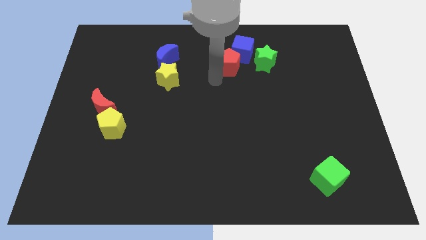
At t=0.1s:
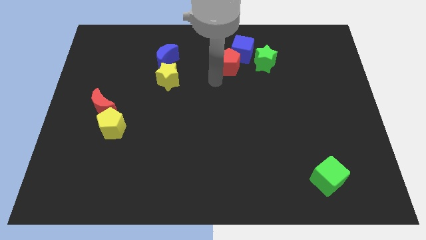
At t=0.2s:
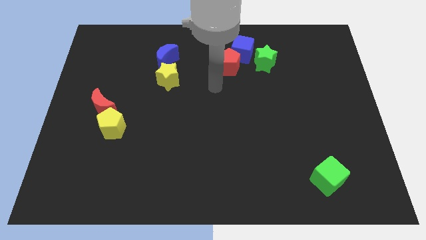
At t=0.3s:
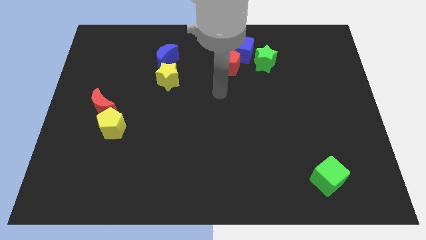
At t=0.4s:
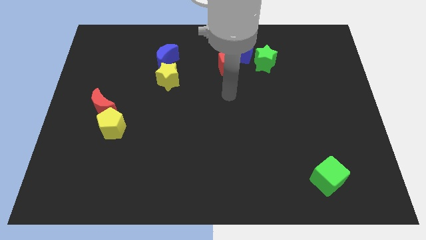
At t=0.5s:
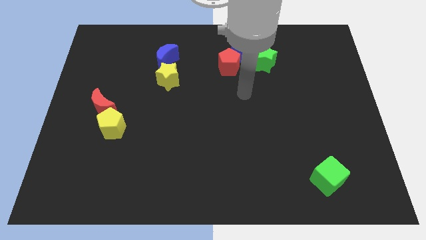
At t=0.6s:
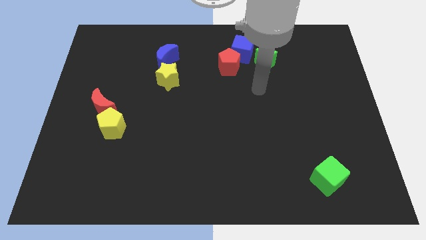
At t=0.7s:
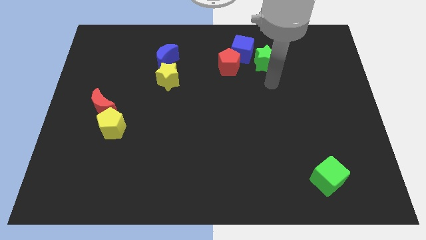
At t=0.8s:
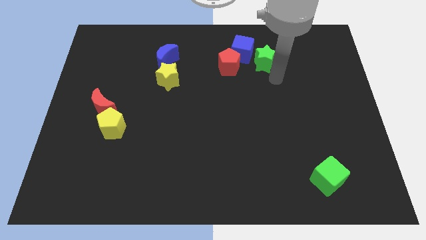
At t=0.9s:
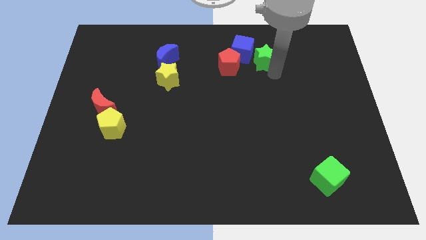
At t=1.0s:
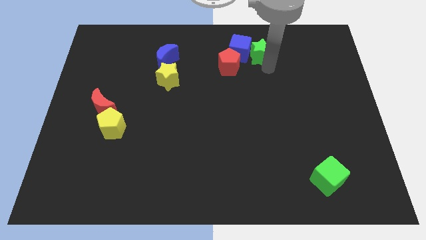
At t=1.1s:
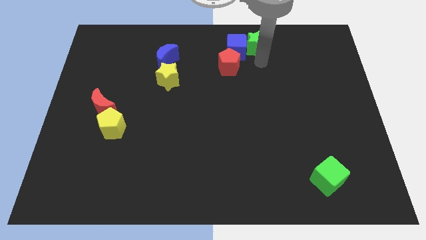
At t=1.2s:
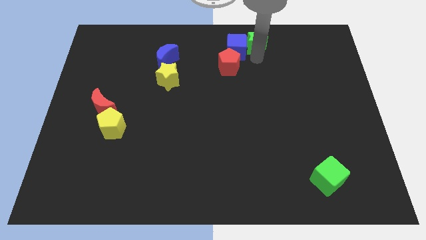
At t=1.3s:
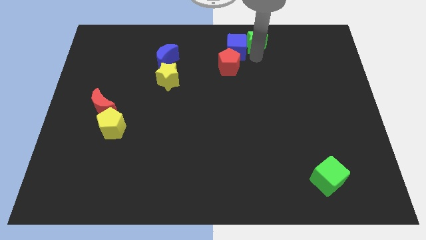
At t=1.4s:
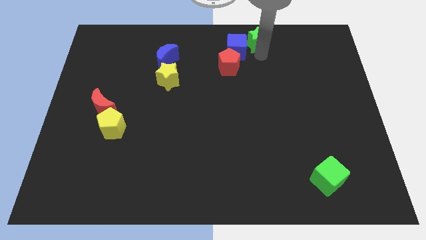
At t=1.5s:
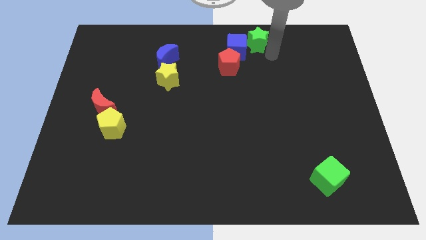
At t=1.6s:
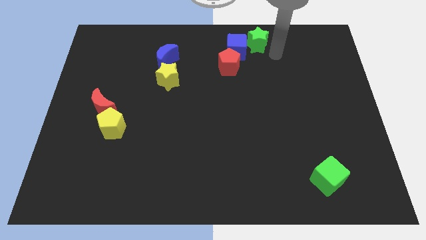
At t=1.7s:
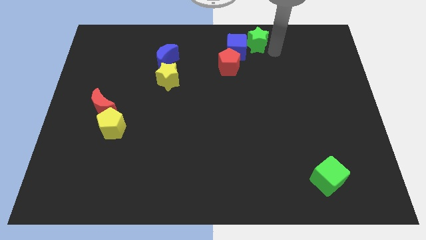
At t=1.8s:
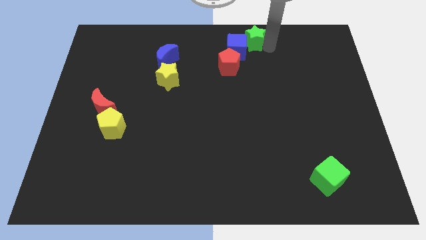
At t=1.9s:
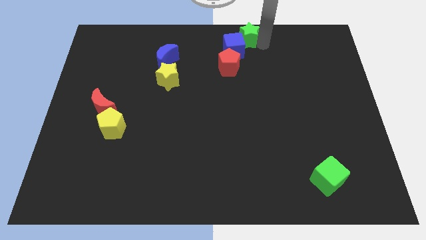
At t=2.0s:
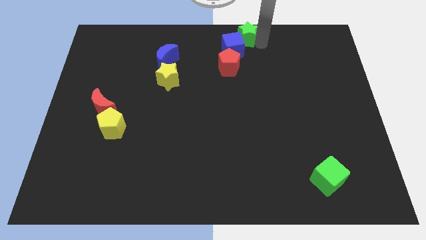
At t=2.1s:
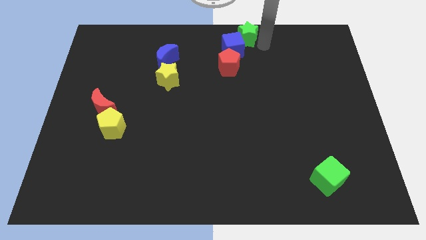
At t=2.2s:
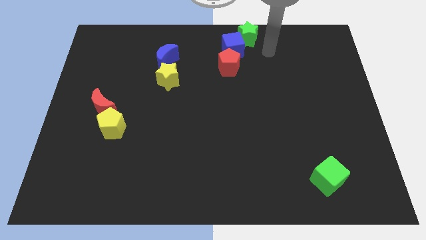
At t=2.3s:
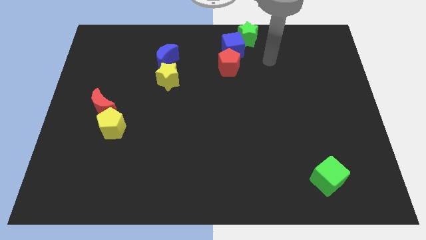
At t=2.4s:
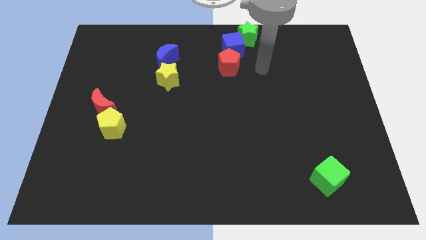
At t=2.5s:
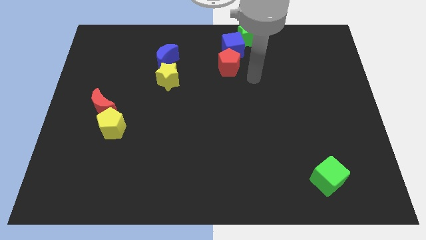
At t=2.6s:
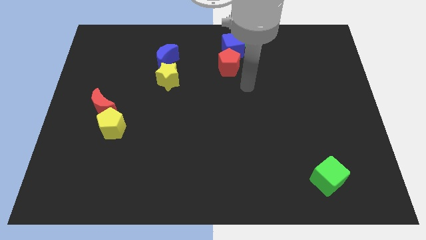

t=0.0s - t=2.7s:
push the green star into the blue cube

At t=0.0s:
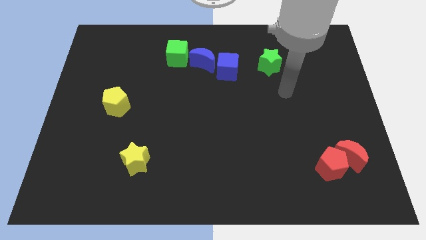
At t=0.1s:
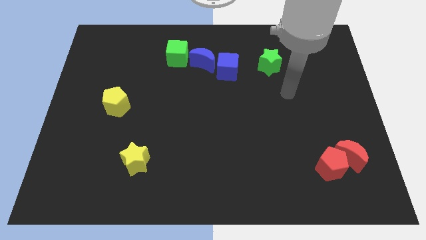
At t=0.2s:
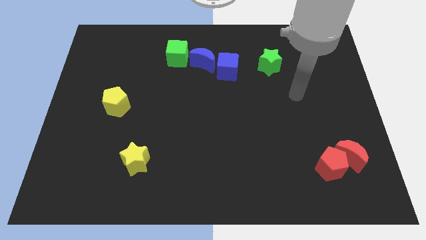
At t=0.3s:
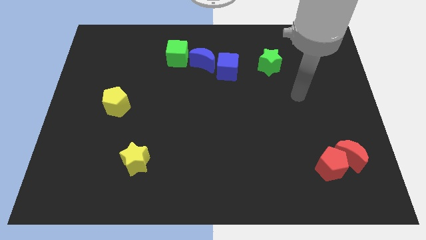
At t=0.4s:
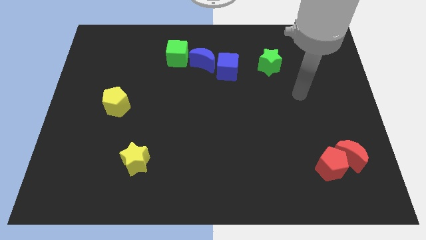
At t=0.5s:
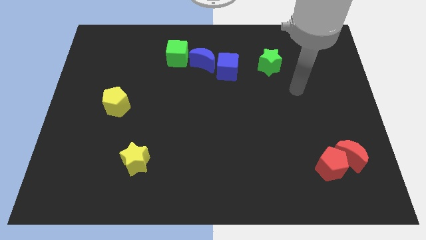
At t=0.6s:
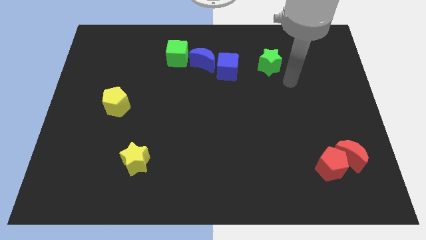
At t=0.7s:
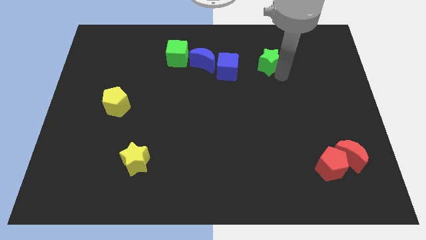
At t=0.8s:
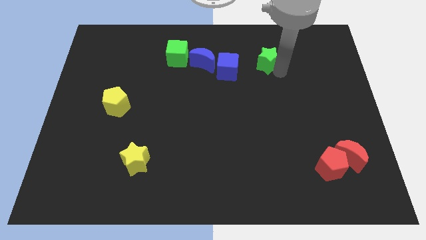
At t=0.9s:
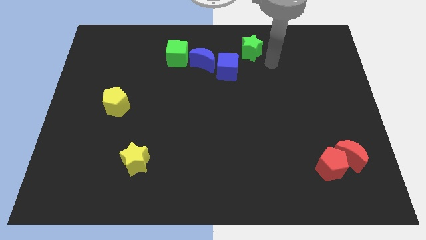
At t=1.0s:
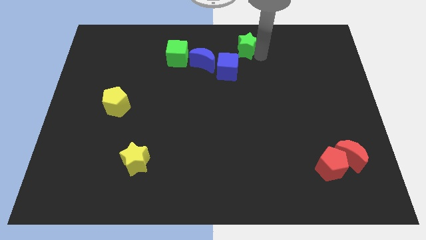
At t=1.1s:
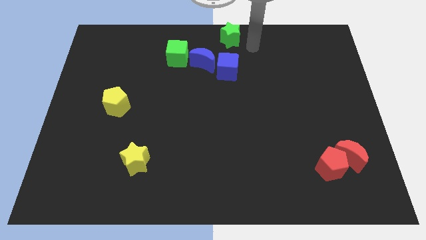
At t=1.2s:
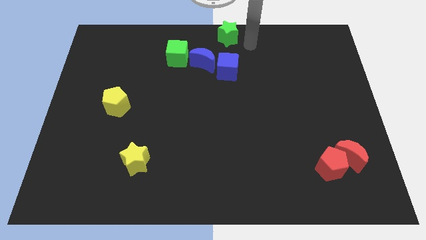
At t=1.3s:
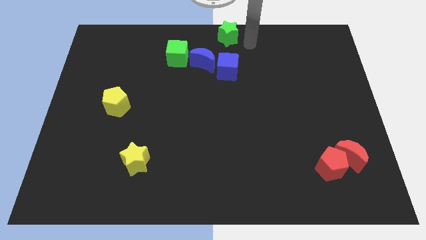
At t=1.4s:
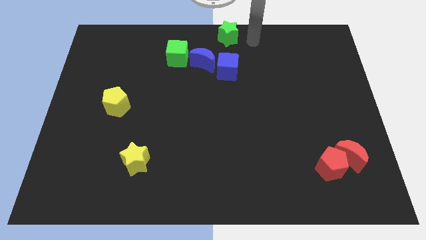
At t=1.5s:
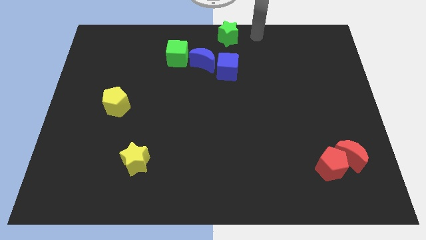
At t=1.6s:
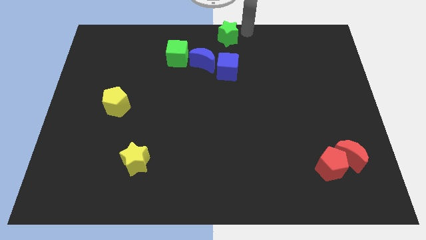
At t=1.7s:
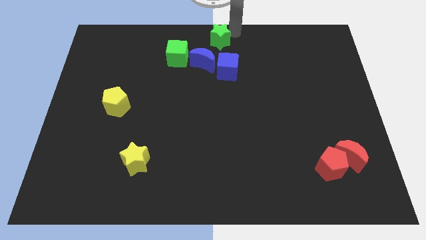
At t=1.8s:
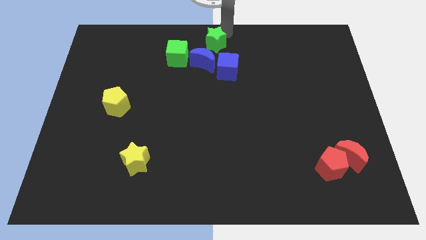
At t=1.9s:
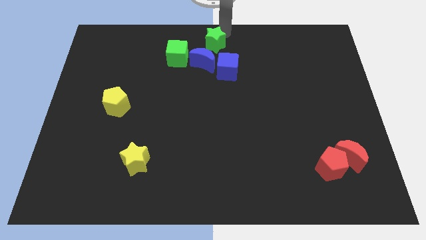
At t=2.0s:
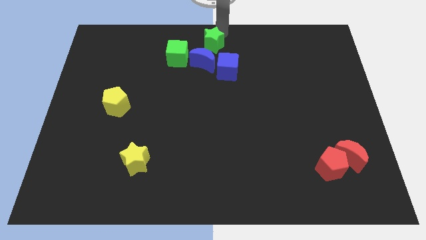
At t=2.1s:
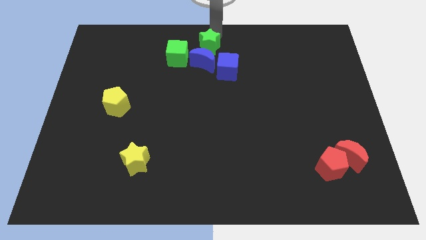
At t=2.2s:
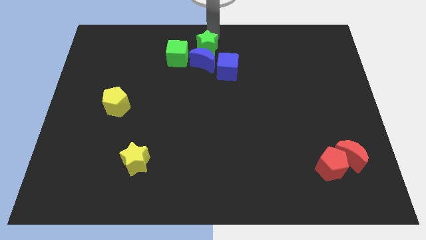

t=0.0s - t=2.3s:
place the green star above the blue crescent

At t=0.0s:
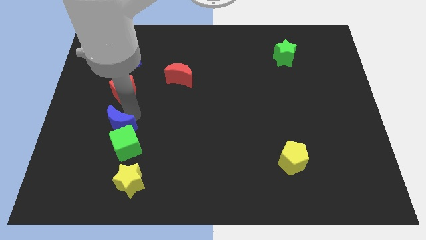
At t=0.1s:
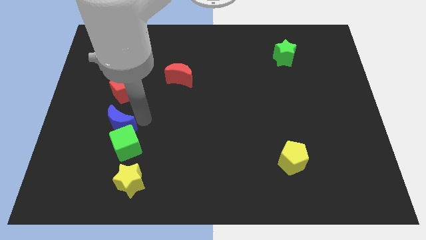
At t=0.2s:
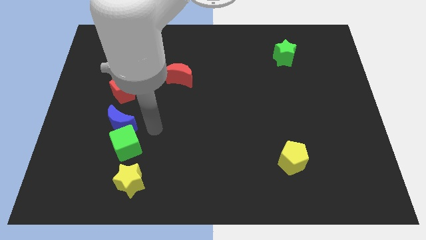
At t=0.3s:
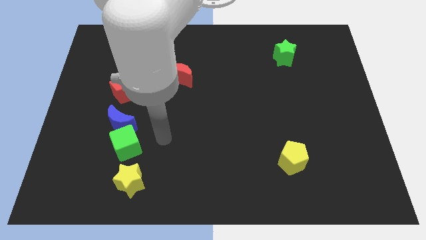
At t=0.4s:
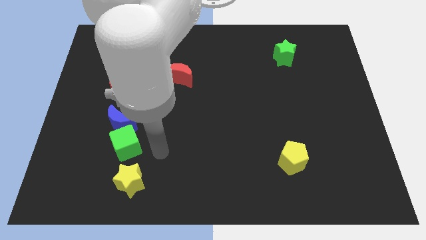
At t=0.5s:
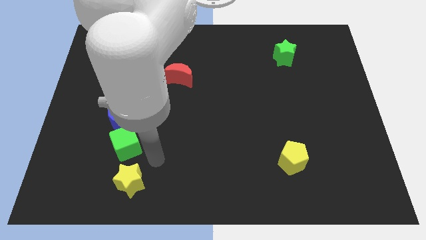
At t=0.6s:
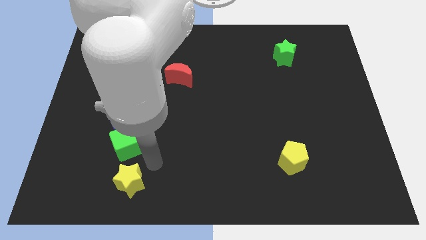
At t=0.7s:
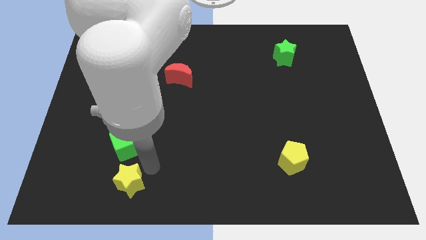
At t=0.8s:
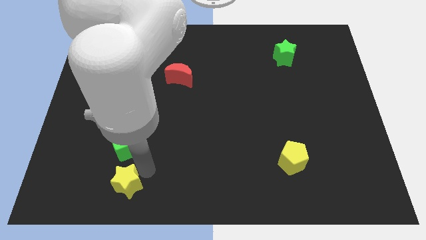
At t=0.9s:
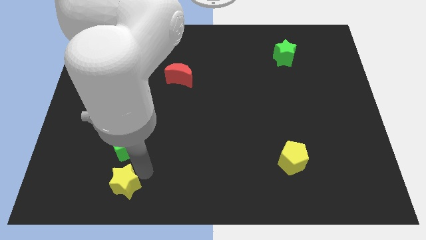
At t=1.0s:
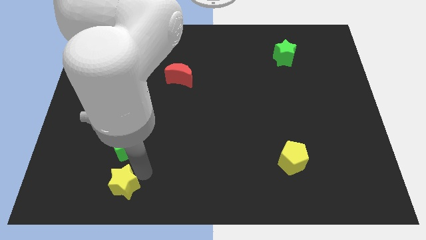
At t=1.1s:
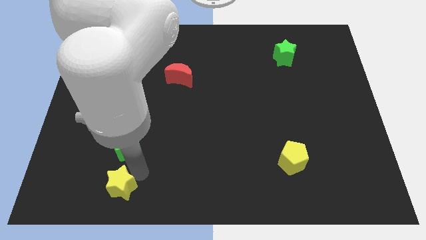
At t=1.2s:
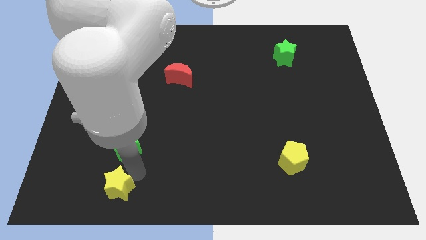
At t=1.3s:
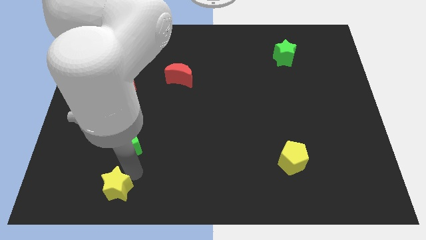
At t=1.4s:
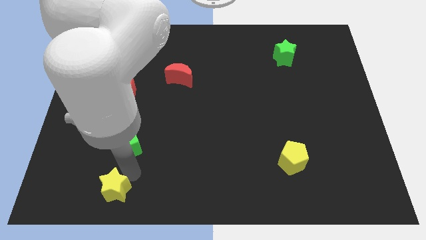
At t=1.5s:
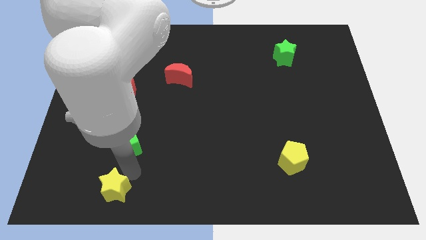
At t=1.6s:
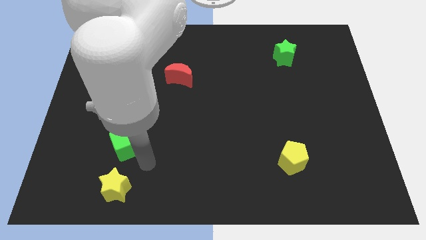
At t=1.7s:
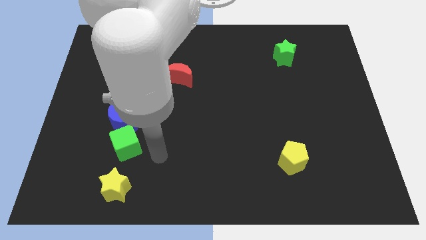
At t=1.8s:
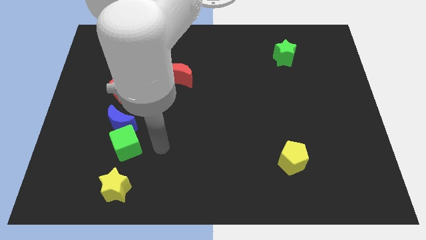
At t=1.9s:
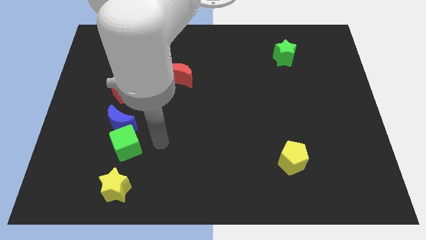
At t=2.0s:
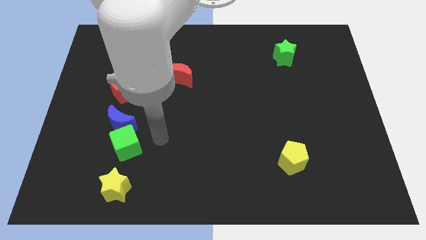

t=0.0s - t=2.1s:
slide yellow star slightly to the left

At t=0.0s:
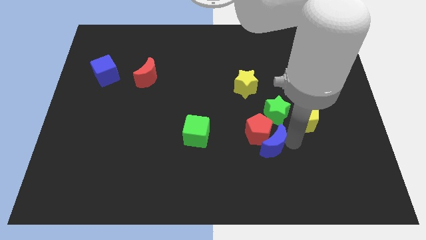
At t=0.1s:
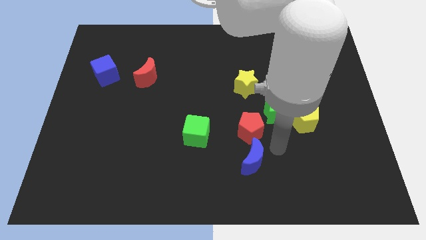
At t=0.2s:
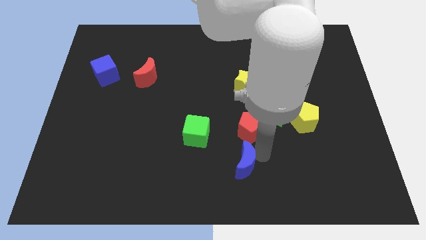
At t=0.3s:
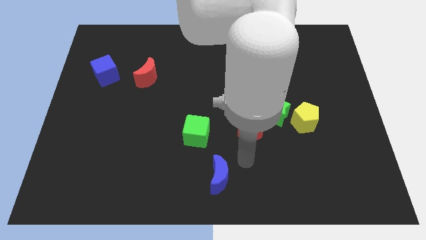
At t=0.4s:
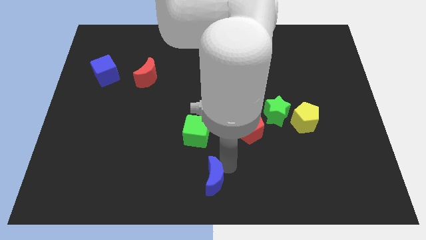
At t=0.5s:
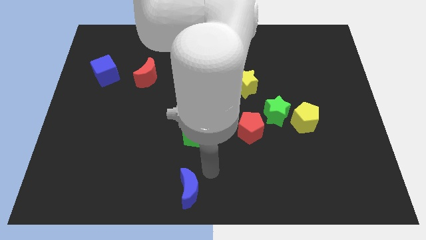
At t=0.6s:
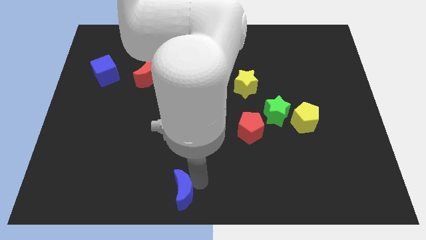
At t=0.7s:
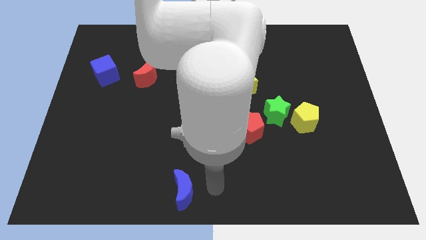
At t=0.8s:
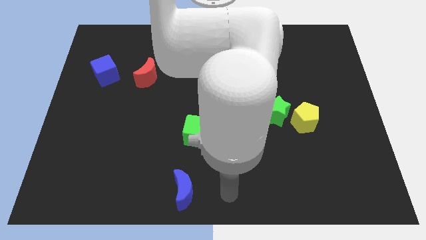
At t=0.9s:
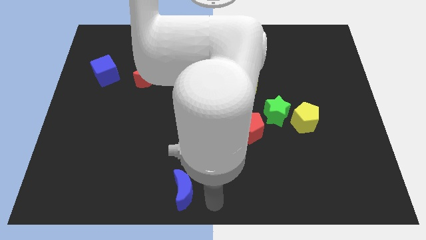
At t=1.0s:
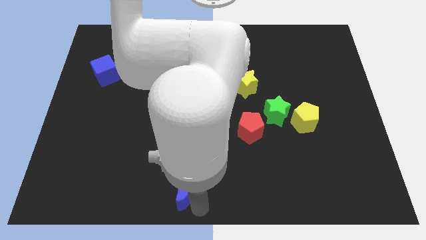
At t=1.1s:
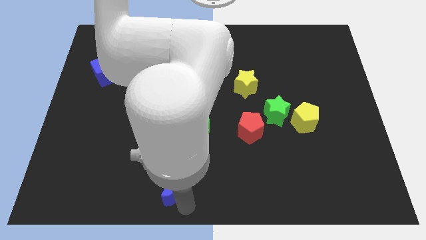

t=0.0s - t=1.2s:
separate the blue moon from the red pentagon

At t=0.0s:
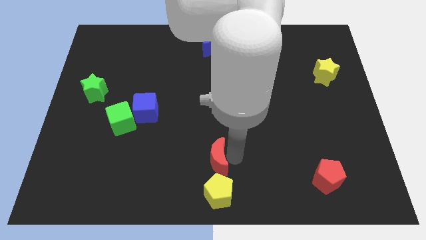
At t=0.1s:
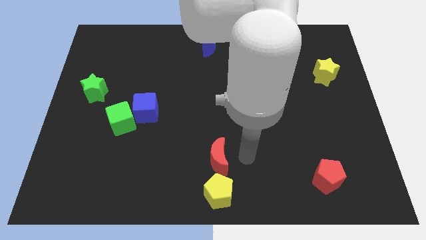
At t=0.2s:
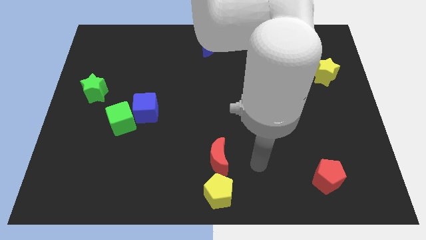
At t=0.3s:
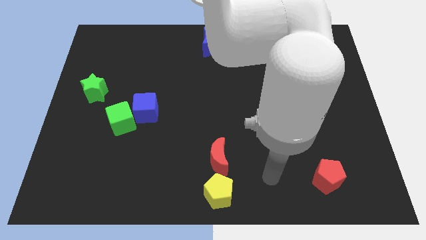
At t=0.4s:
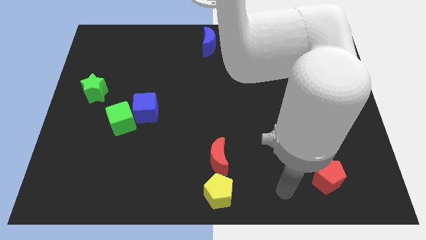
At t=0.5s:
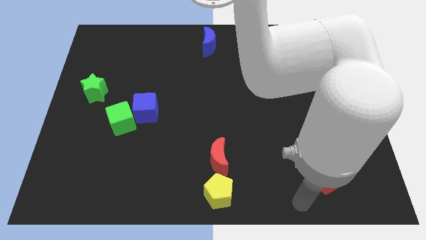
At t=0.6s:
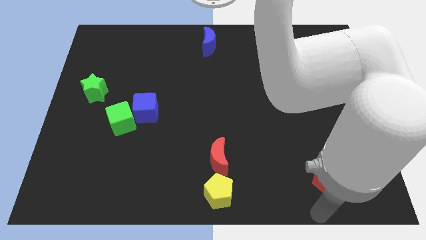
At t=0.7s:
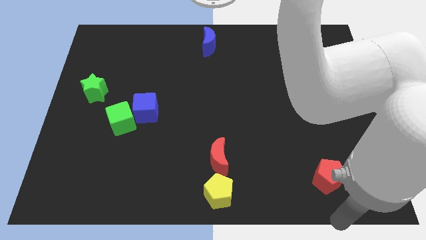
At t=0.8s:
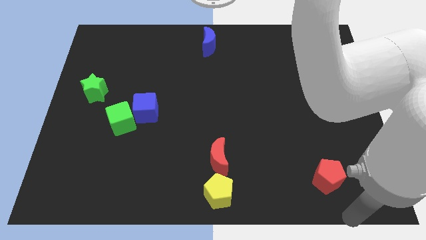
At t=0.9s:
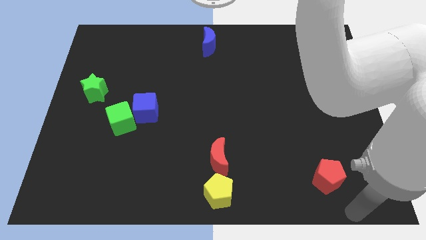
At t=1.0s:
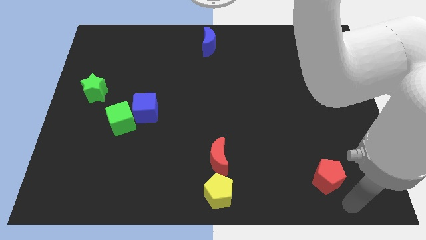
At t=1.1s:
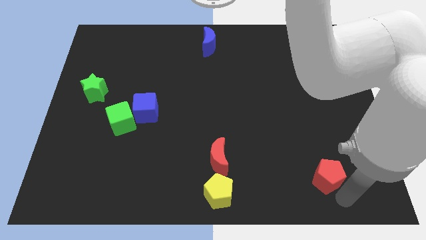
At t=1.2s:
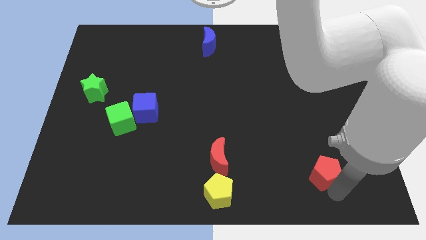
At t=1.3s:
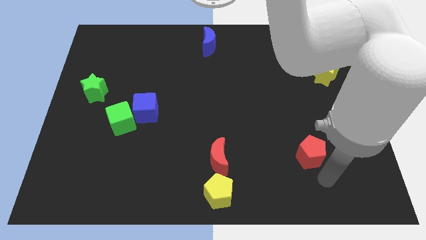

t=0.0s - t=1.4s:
move your arm away from the red moon
